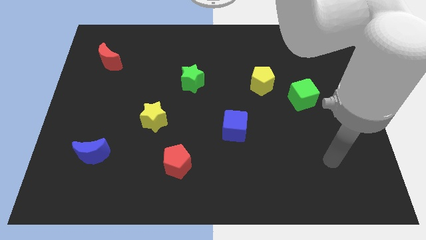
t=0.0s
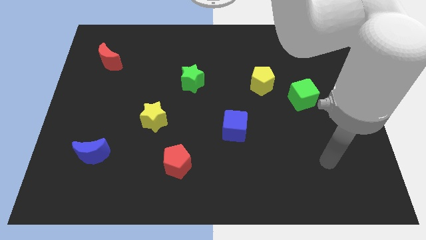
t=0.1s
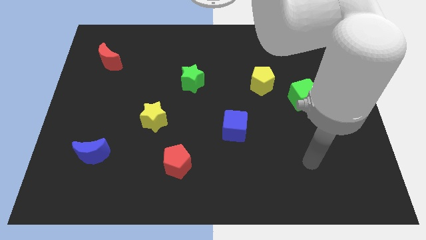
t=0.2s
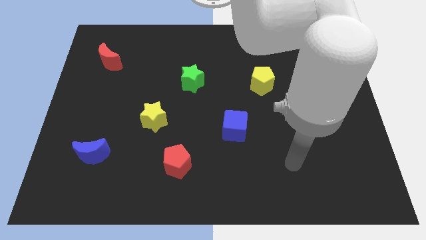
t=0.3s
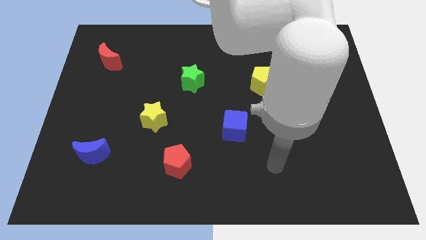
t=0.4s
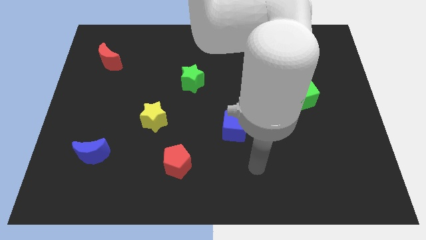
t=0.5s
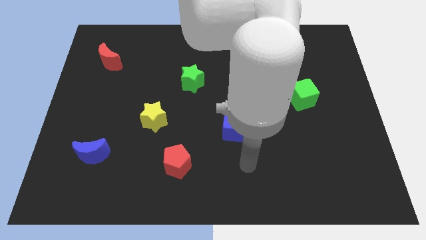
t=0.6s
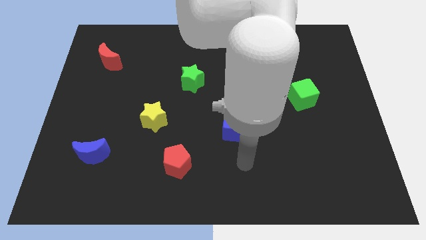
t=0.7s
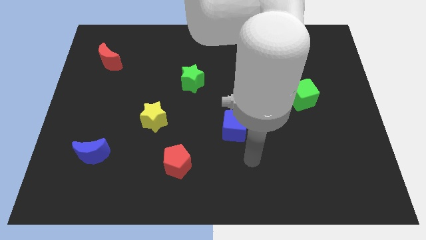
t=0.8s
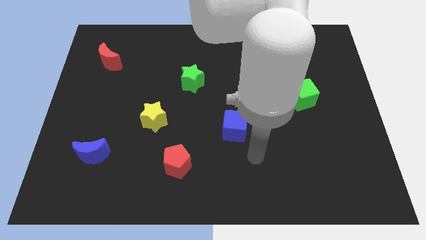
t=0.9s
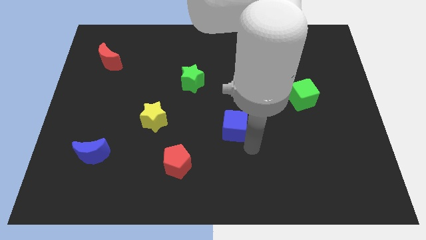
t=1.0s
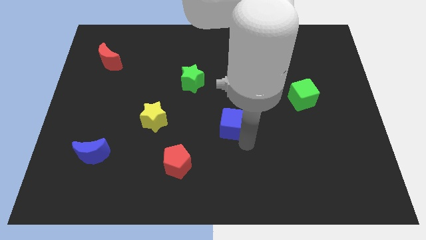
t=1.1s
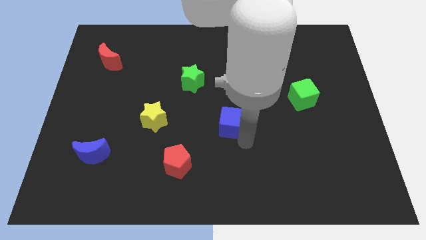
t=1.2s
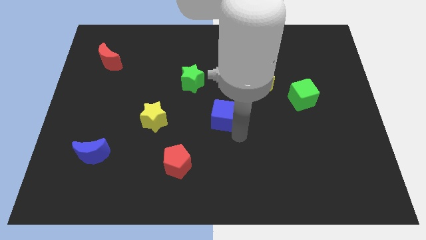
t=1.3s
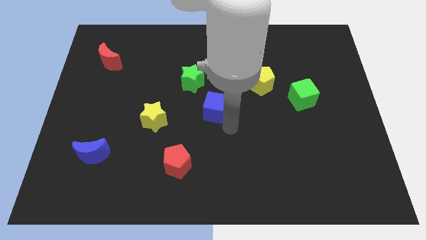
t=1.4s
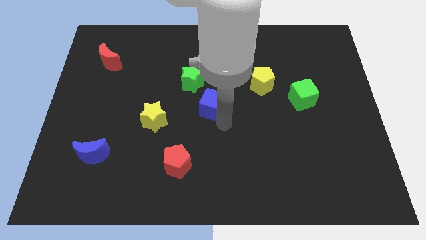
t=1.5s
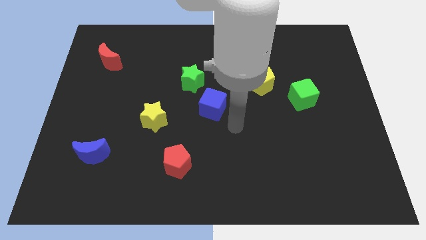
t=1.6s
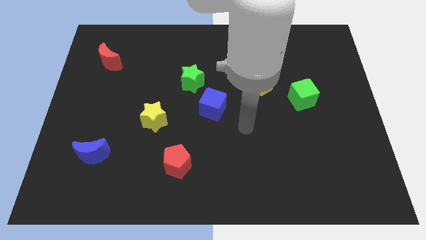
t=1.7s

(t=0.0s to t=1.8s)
push the blue cube close to the green star

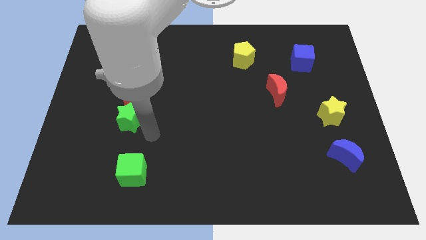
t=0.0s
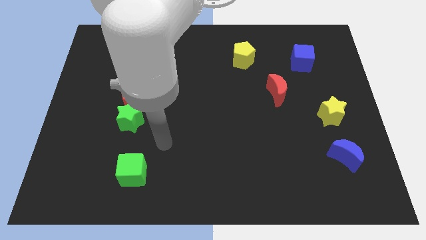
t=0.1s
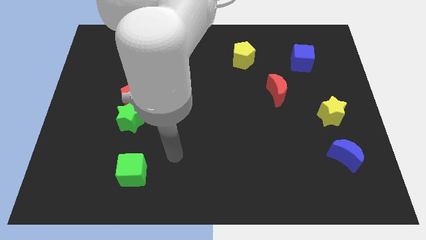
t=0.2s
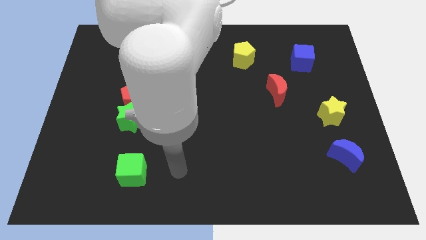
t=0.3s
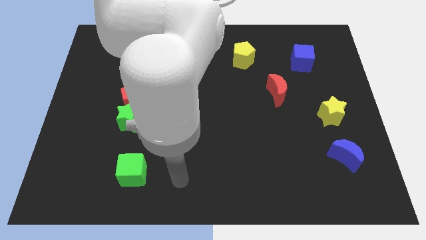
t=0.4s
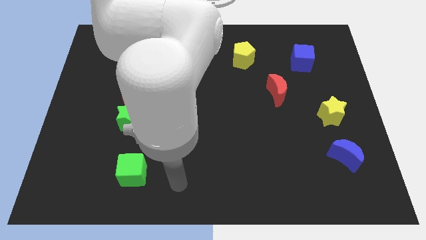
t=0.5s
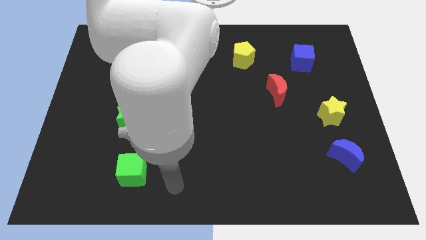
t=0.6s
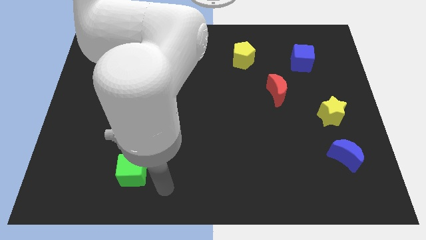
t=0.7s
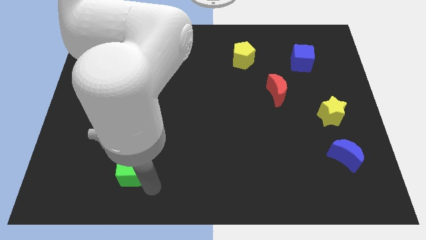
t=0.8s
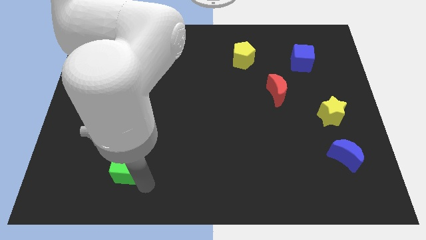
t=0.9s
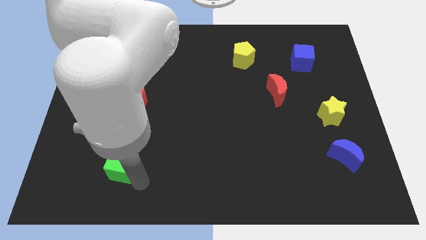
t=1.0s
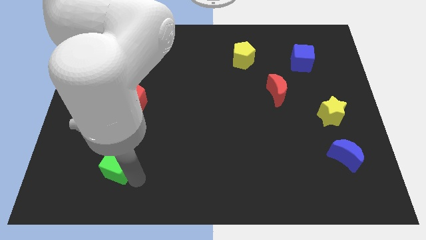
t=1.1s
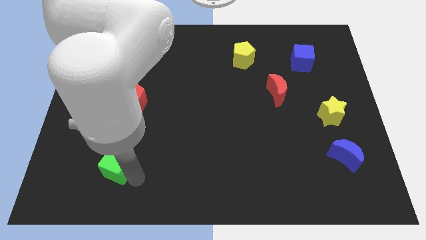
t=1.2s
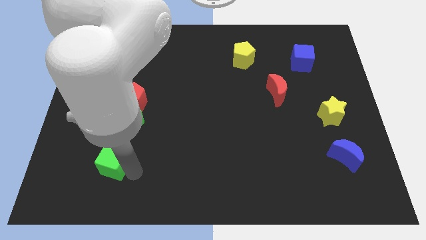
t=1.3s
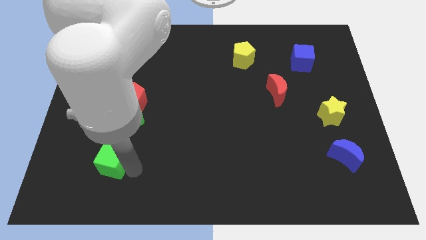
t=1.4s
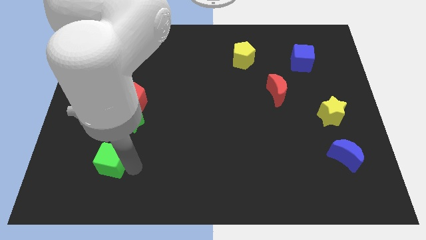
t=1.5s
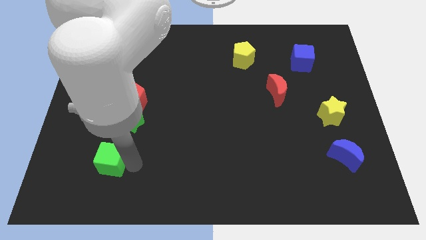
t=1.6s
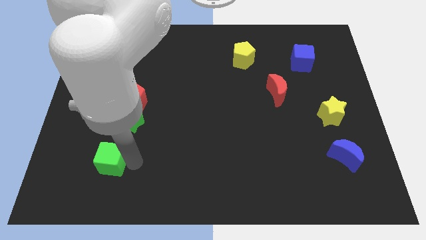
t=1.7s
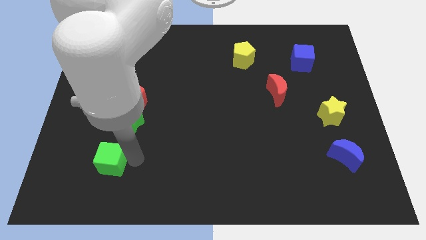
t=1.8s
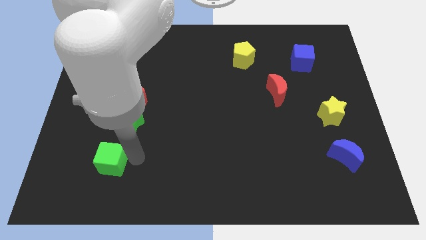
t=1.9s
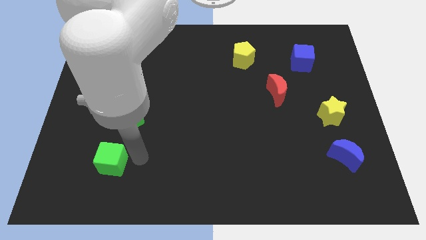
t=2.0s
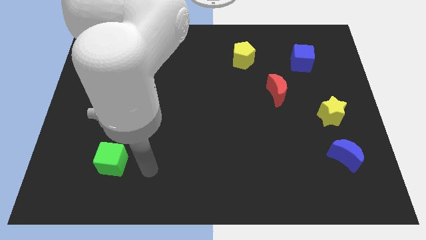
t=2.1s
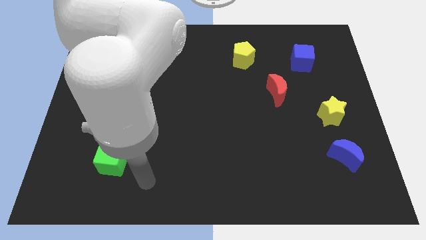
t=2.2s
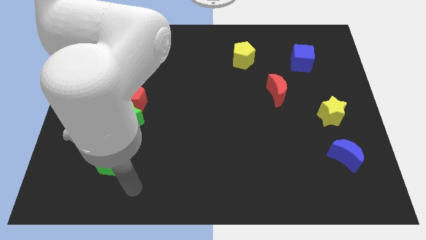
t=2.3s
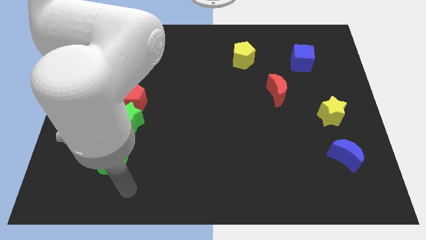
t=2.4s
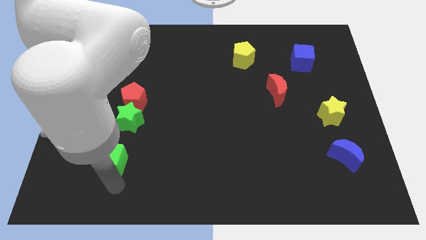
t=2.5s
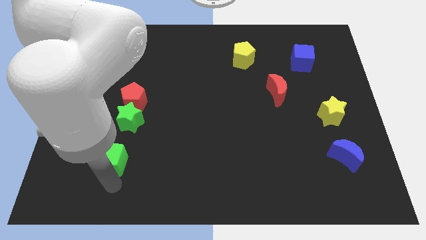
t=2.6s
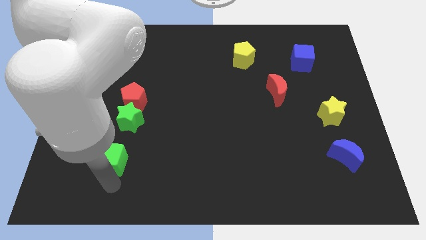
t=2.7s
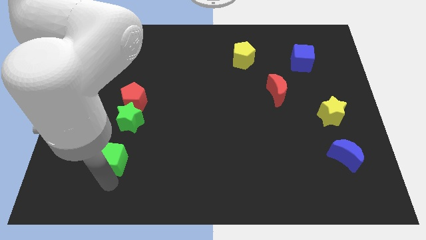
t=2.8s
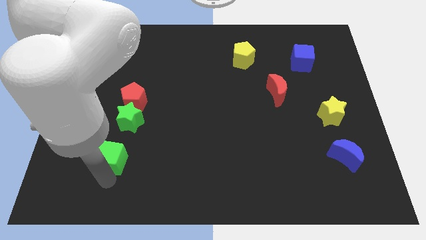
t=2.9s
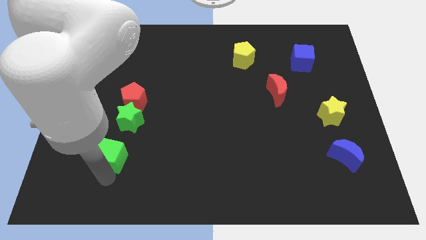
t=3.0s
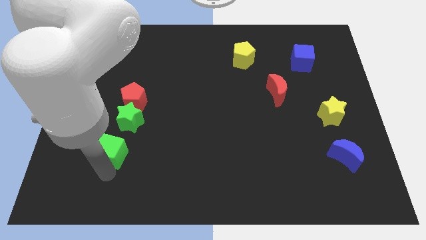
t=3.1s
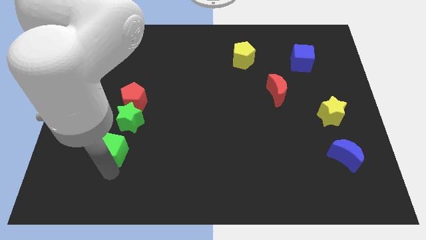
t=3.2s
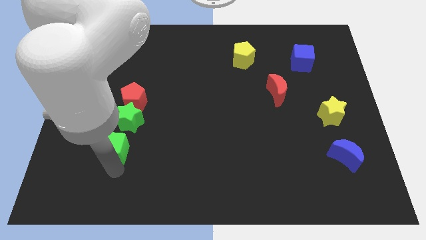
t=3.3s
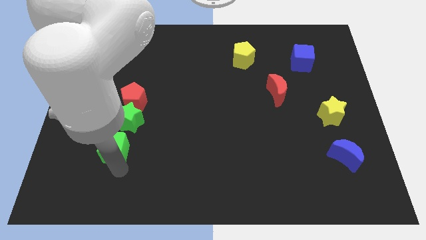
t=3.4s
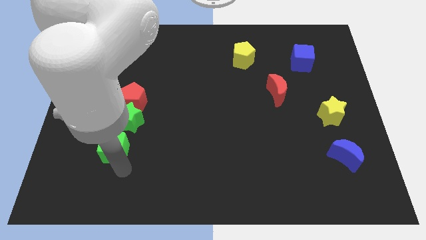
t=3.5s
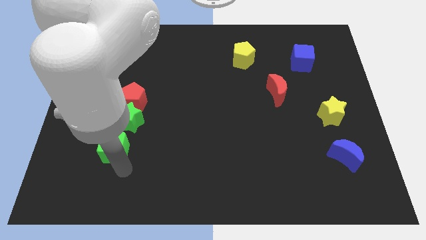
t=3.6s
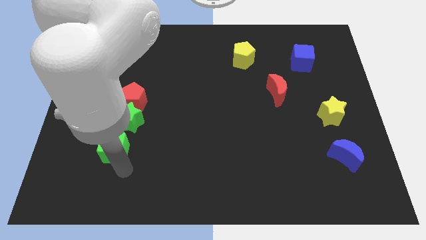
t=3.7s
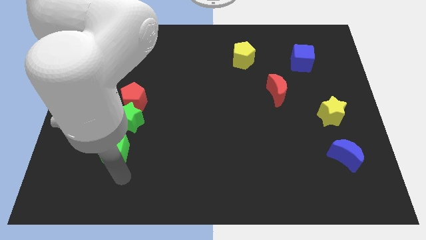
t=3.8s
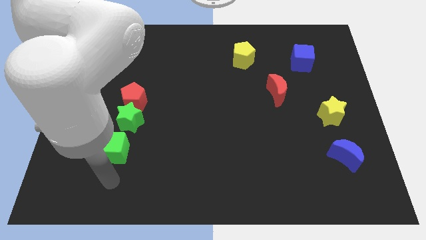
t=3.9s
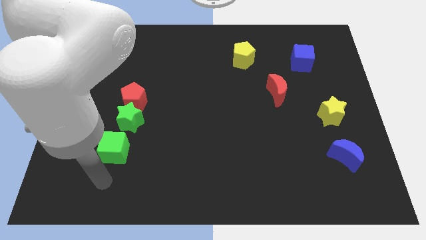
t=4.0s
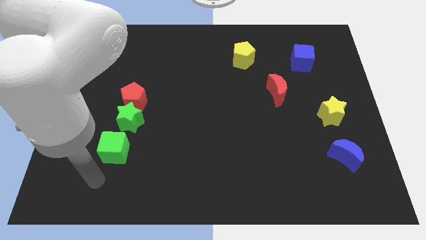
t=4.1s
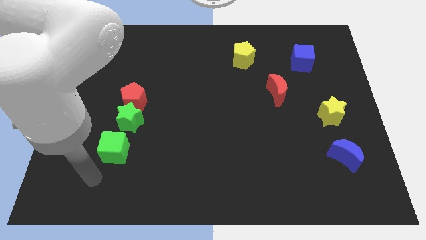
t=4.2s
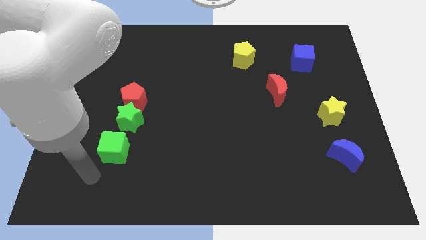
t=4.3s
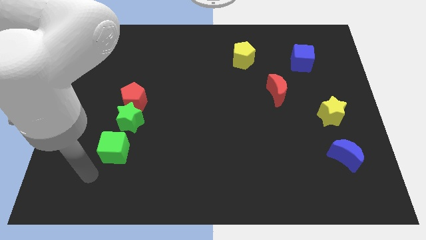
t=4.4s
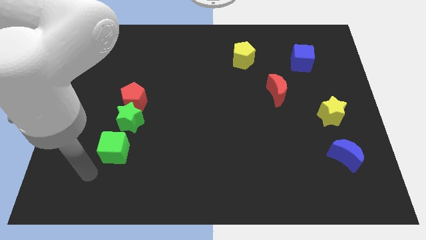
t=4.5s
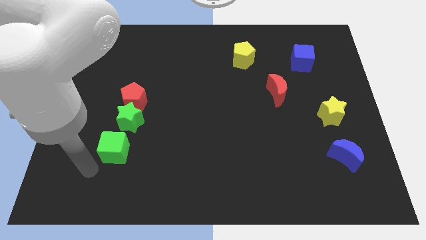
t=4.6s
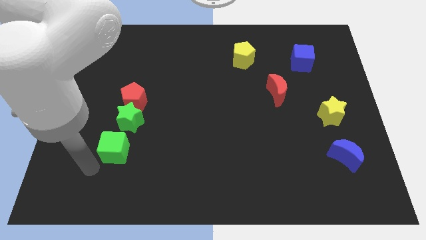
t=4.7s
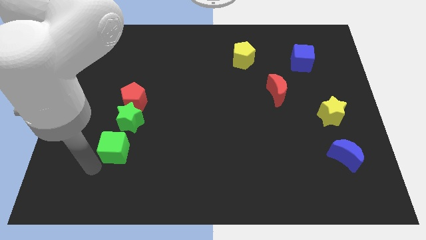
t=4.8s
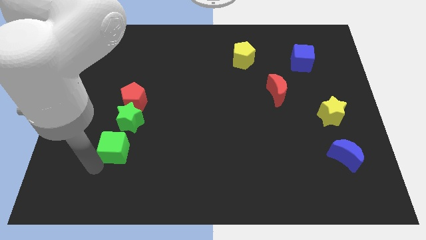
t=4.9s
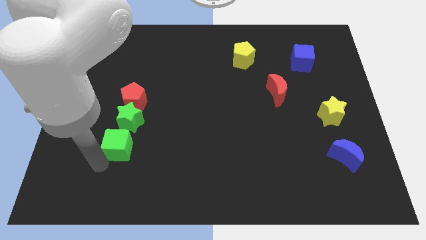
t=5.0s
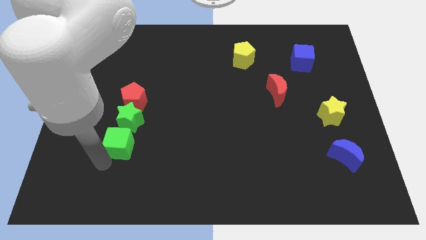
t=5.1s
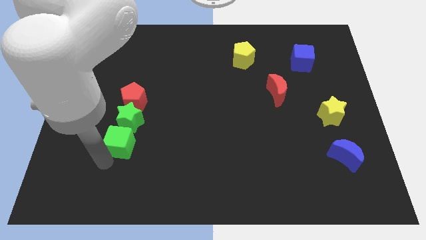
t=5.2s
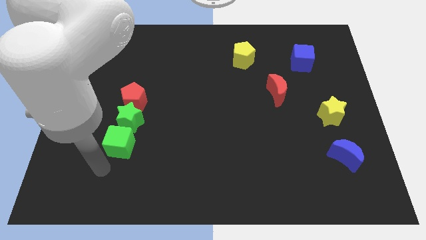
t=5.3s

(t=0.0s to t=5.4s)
push the green cube close to the bottom side of the green star

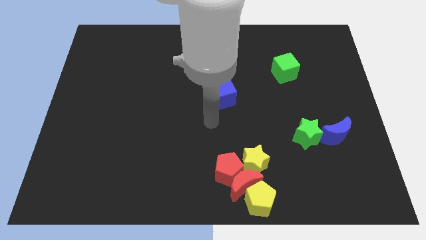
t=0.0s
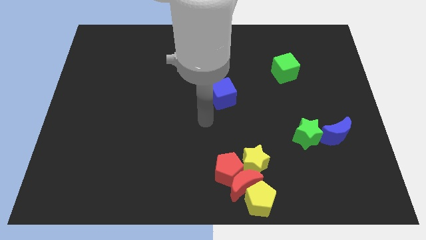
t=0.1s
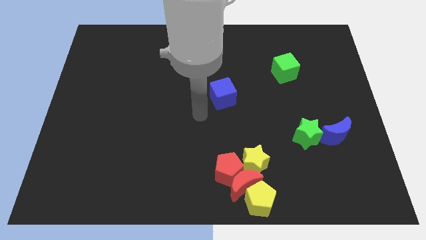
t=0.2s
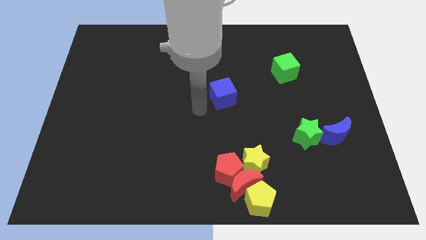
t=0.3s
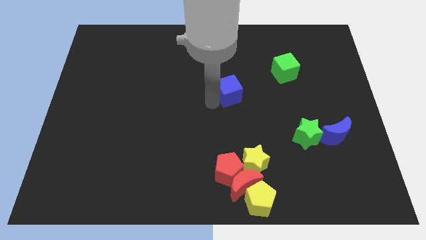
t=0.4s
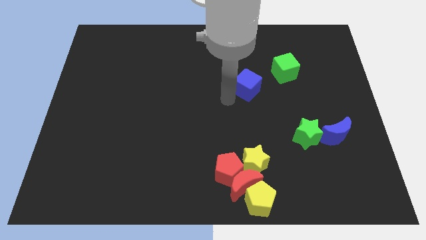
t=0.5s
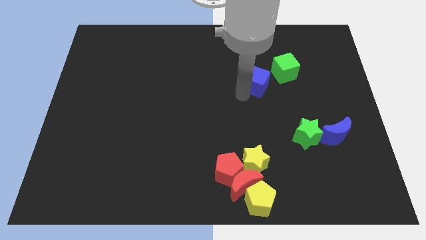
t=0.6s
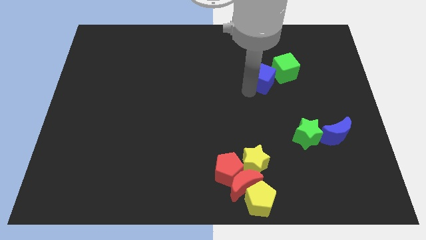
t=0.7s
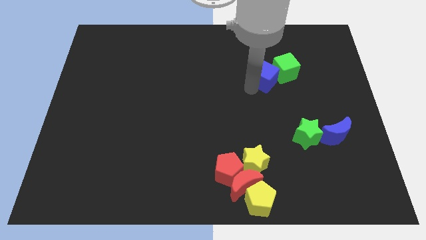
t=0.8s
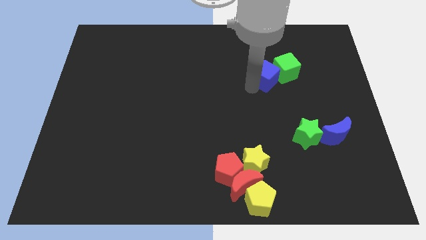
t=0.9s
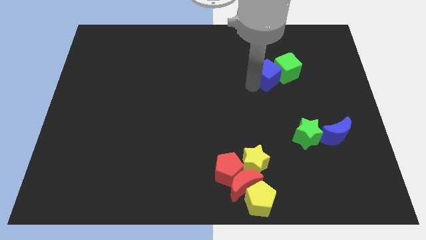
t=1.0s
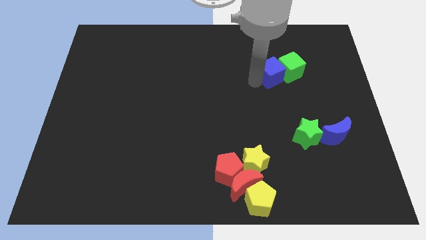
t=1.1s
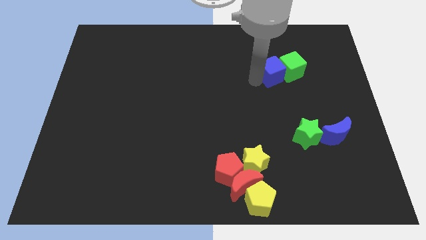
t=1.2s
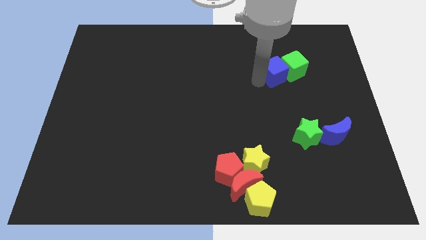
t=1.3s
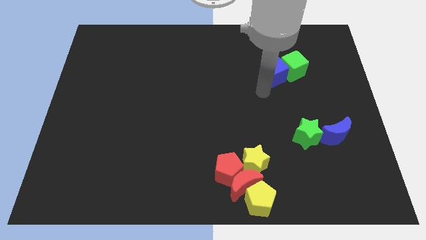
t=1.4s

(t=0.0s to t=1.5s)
push the blue cube into the green cube

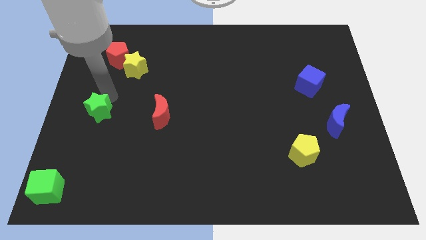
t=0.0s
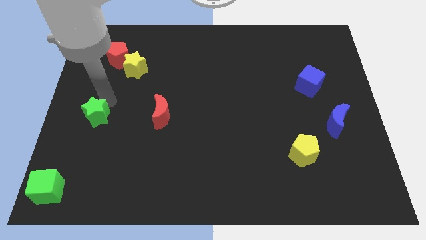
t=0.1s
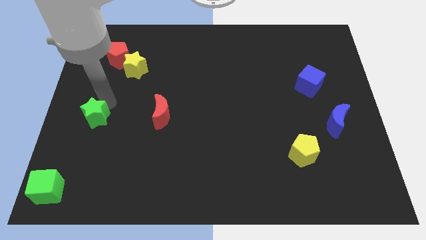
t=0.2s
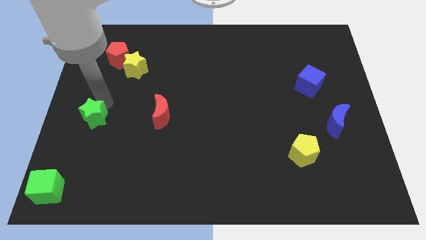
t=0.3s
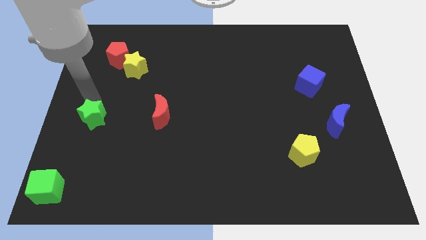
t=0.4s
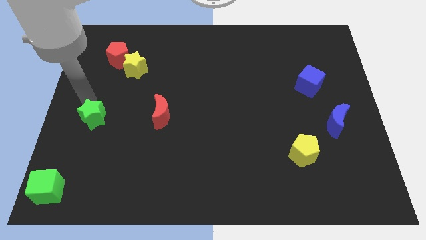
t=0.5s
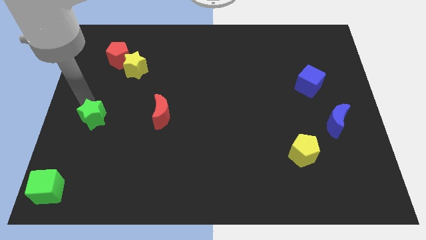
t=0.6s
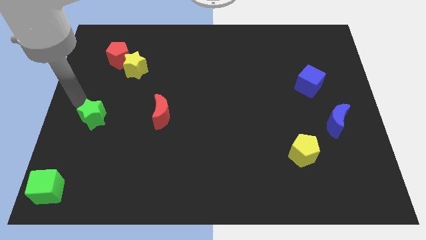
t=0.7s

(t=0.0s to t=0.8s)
move the green star slightly left center of the board
